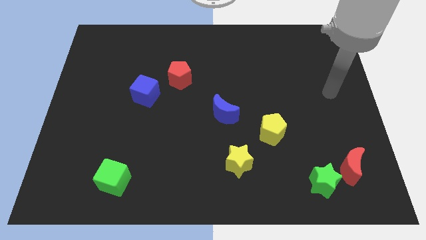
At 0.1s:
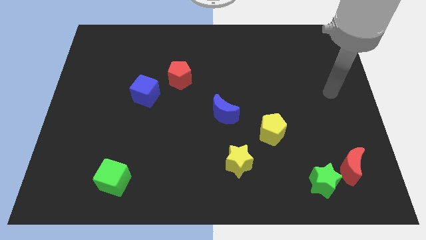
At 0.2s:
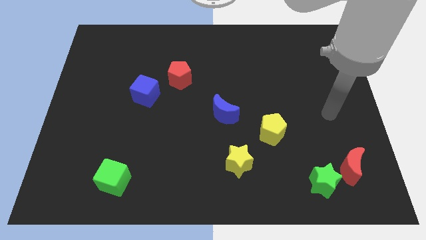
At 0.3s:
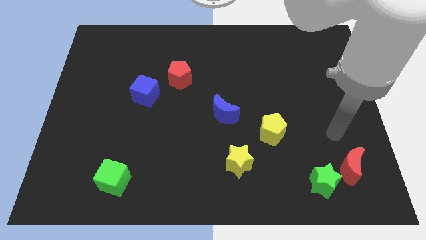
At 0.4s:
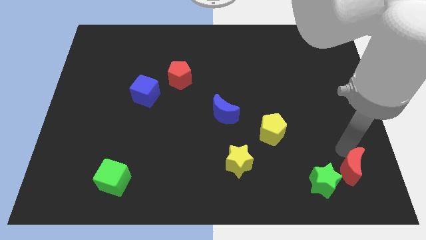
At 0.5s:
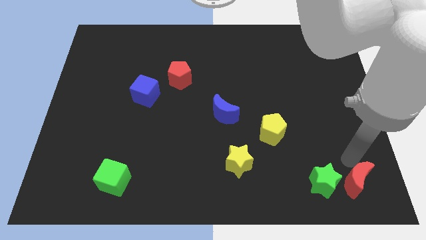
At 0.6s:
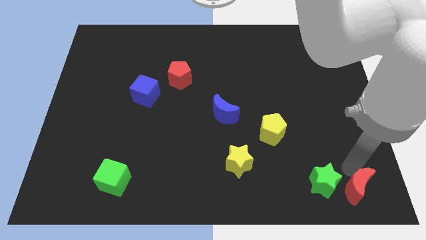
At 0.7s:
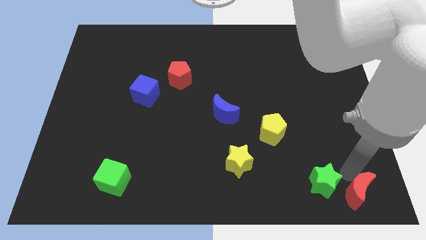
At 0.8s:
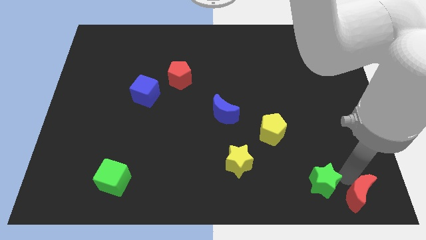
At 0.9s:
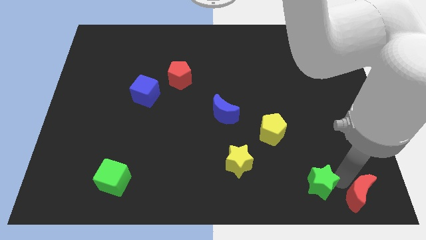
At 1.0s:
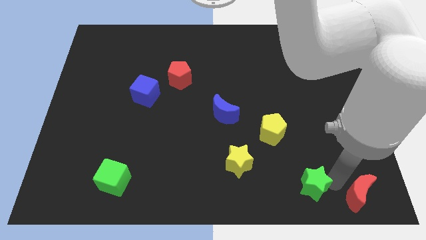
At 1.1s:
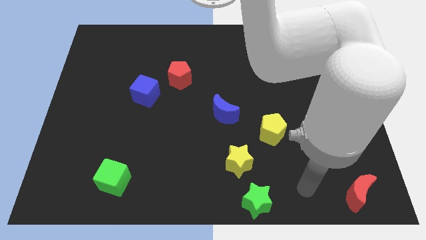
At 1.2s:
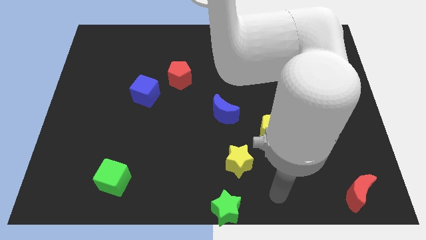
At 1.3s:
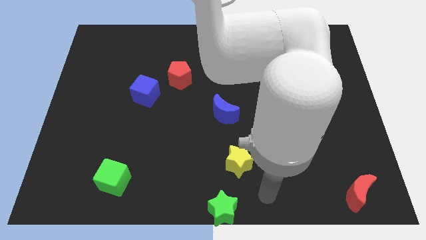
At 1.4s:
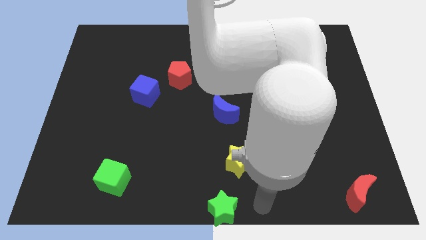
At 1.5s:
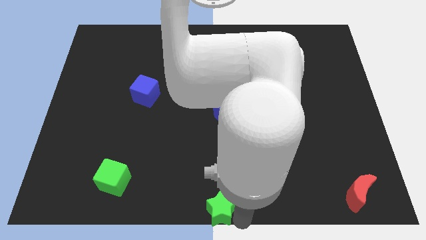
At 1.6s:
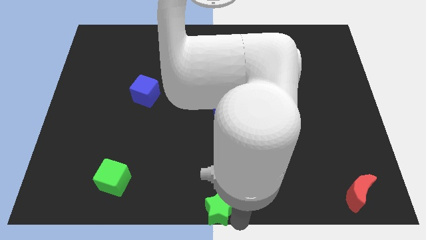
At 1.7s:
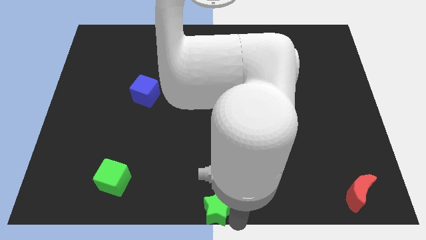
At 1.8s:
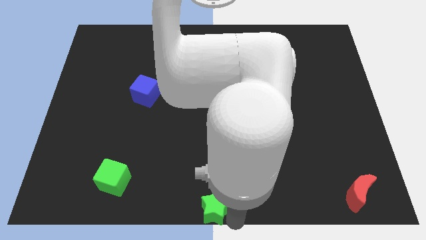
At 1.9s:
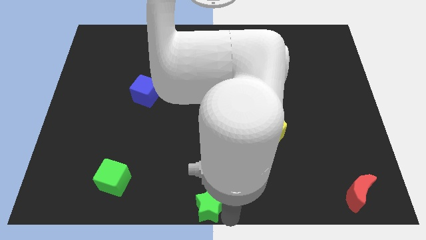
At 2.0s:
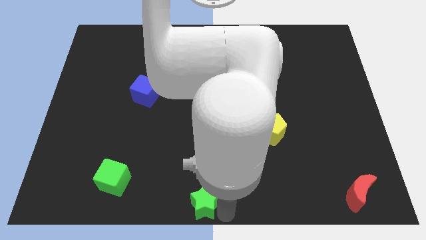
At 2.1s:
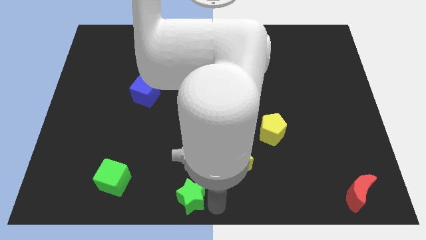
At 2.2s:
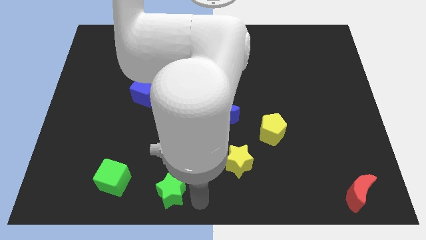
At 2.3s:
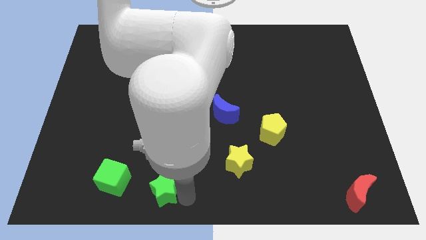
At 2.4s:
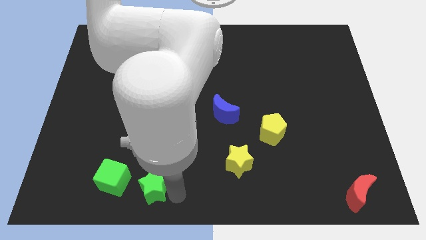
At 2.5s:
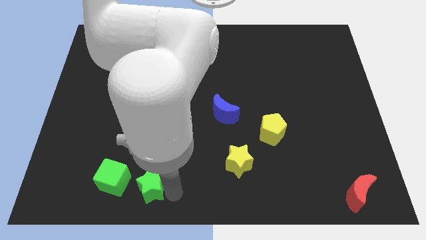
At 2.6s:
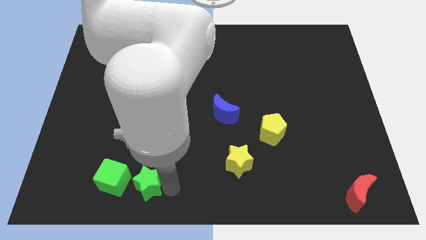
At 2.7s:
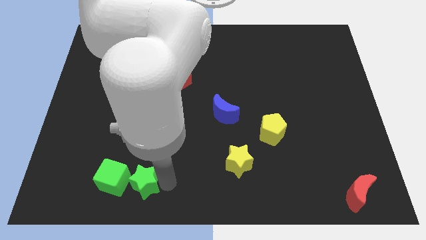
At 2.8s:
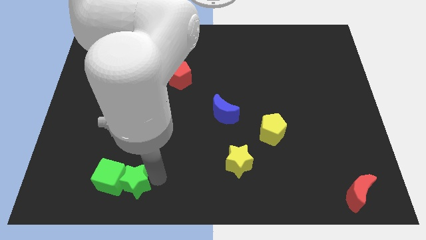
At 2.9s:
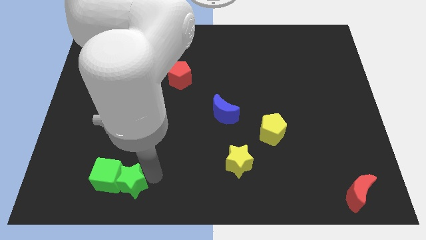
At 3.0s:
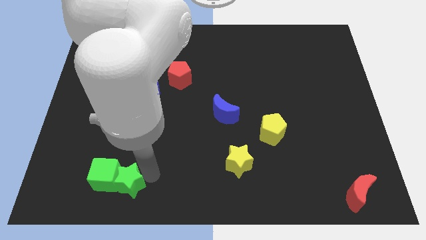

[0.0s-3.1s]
move the green star towards the green cube

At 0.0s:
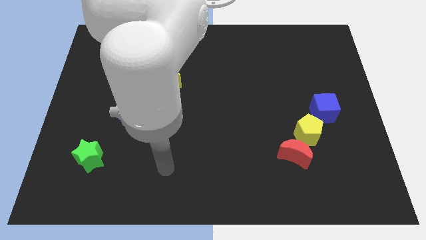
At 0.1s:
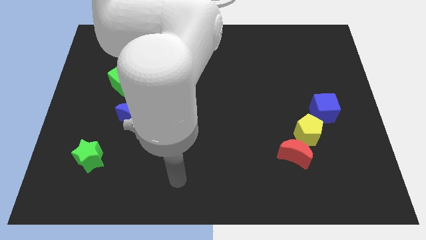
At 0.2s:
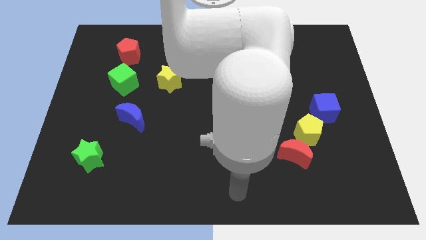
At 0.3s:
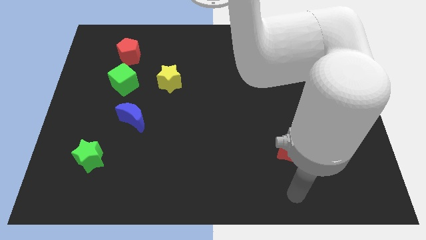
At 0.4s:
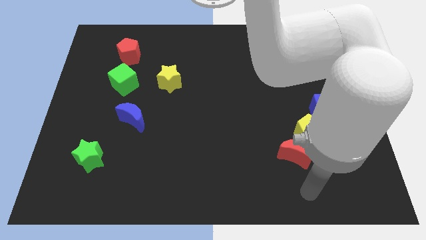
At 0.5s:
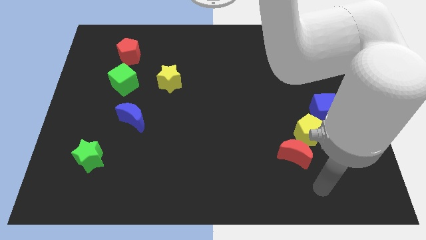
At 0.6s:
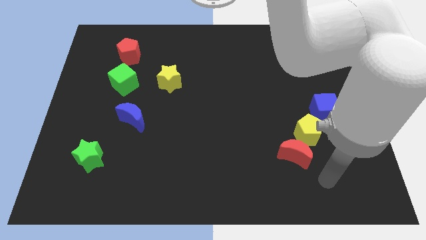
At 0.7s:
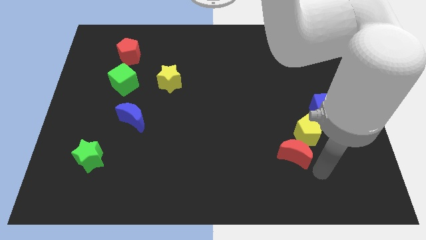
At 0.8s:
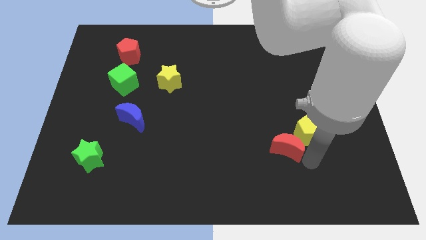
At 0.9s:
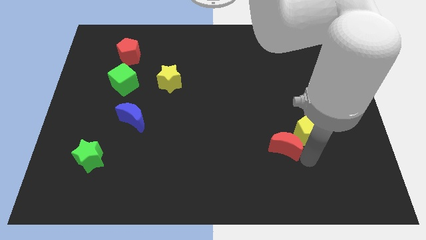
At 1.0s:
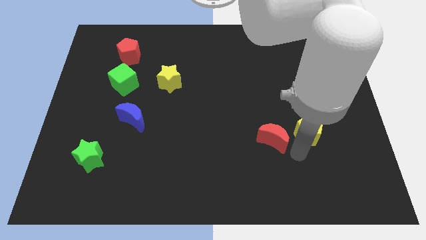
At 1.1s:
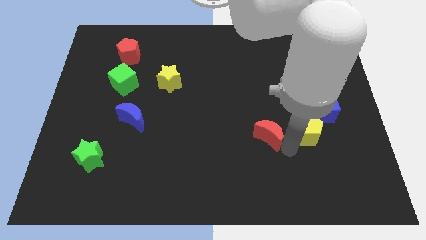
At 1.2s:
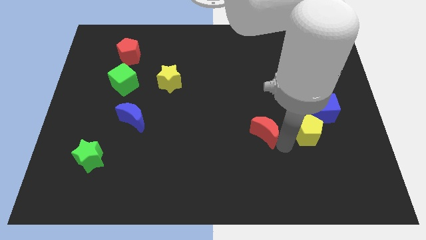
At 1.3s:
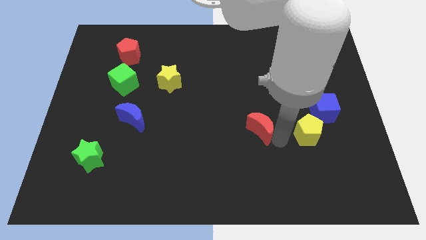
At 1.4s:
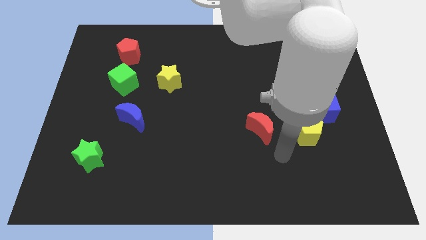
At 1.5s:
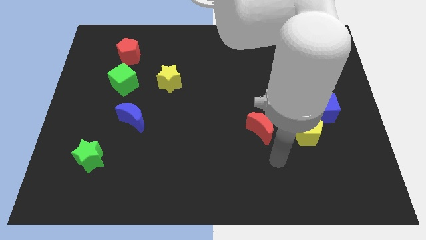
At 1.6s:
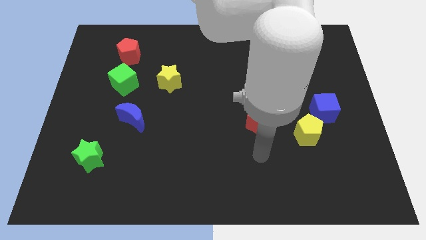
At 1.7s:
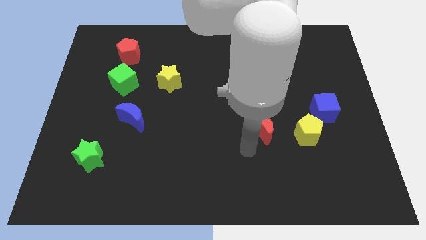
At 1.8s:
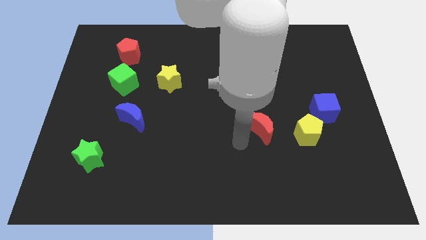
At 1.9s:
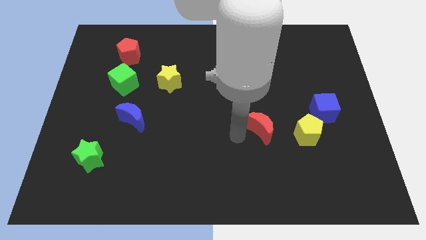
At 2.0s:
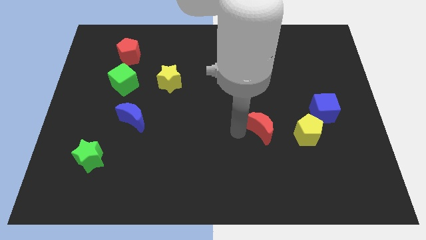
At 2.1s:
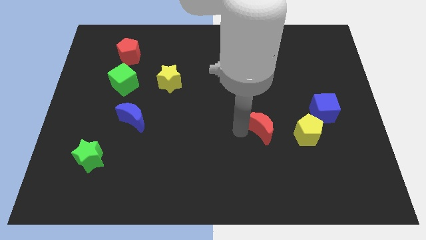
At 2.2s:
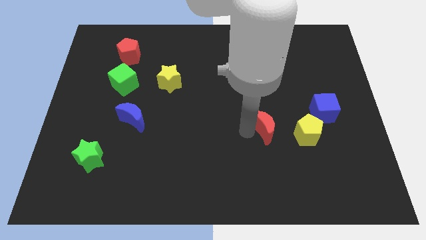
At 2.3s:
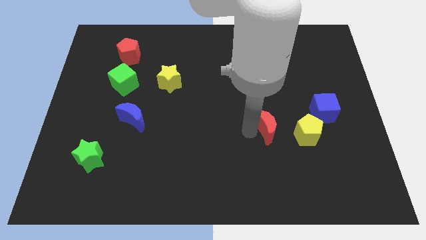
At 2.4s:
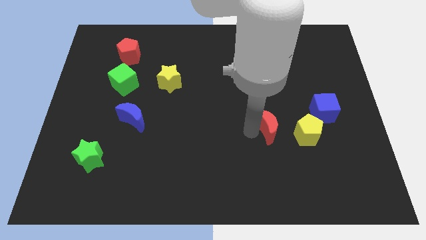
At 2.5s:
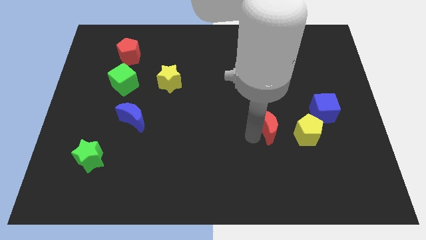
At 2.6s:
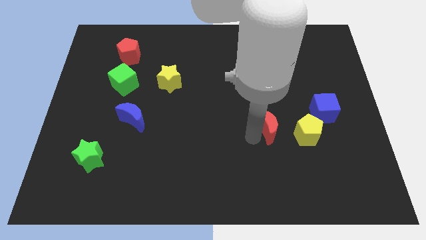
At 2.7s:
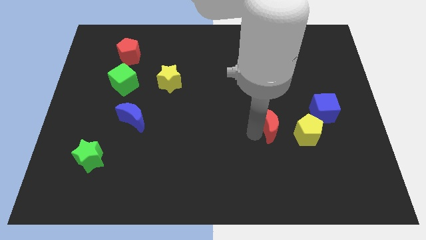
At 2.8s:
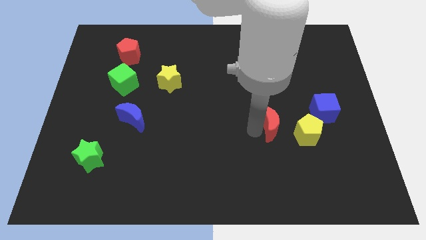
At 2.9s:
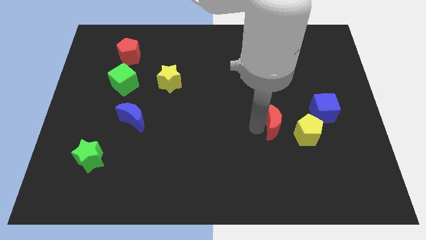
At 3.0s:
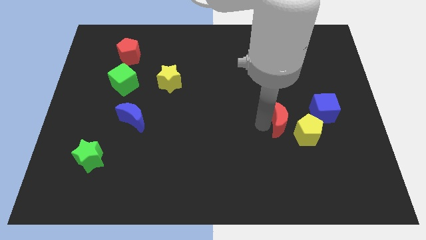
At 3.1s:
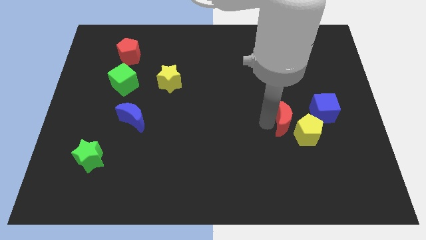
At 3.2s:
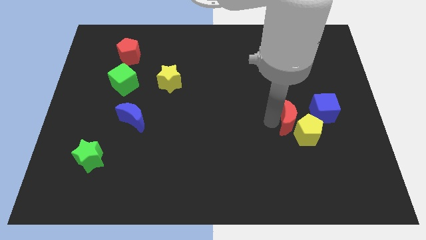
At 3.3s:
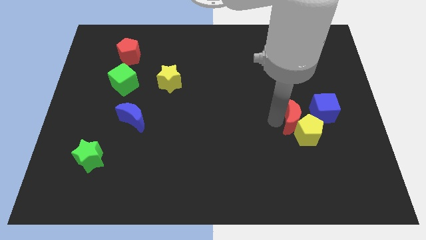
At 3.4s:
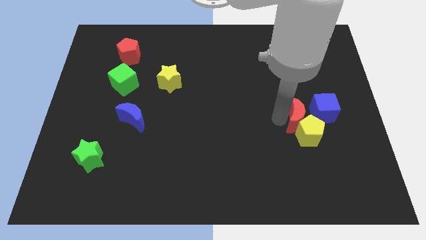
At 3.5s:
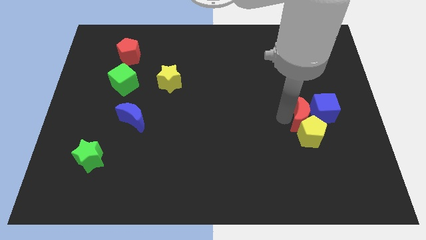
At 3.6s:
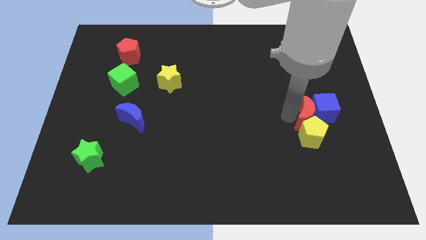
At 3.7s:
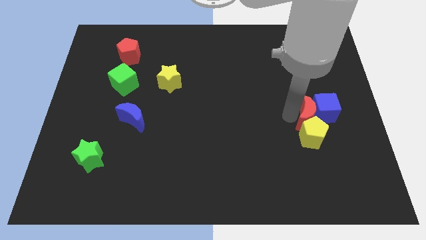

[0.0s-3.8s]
put the red moon to the blue cube

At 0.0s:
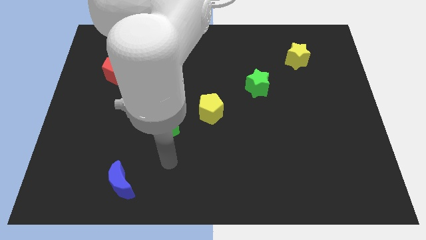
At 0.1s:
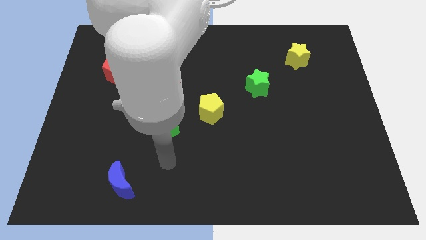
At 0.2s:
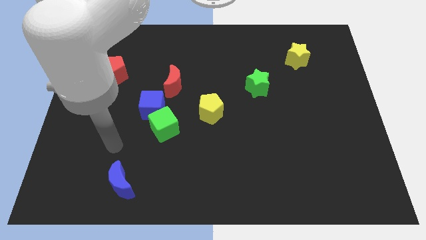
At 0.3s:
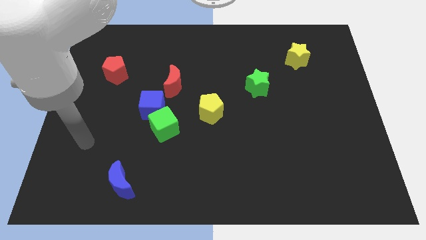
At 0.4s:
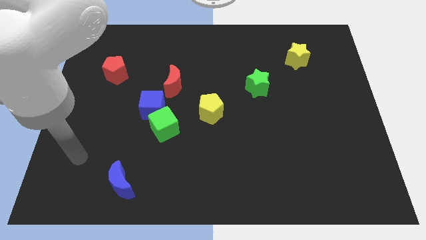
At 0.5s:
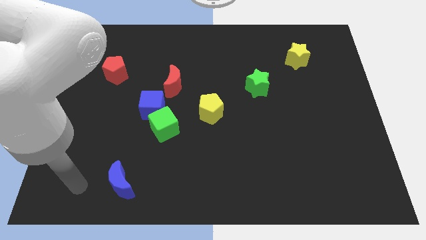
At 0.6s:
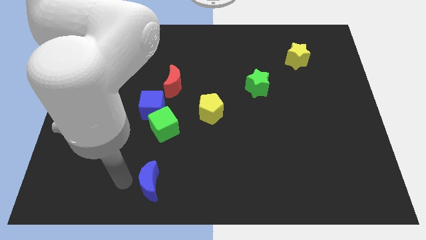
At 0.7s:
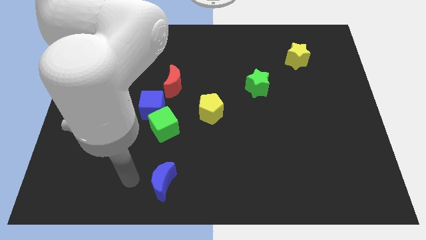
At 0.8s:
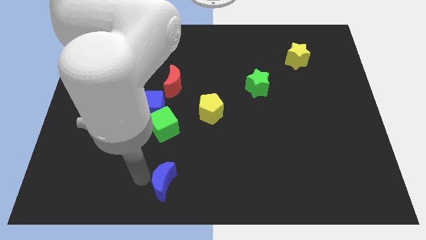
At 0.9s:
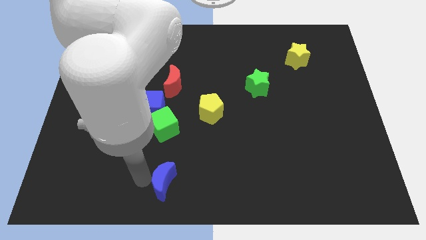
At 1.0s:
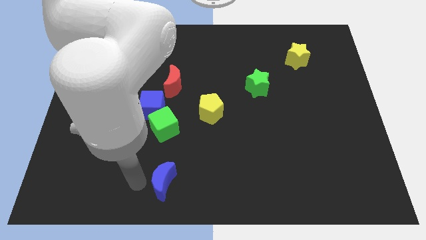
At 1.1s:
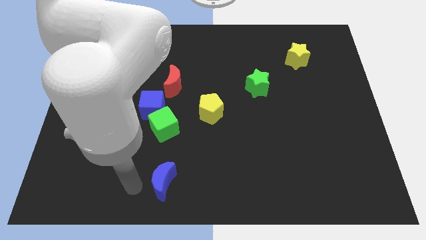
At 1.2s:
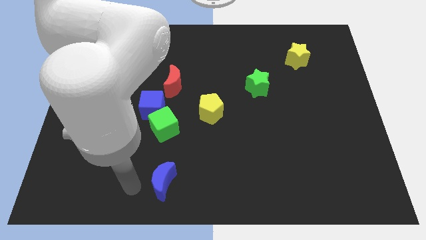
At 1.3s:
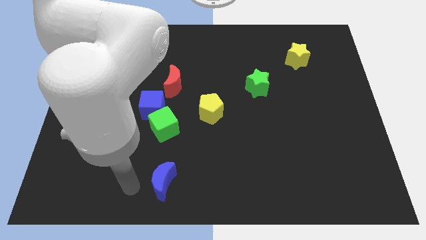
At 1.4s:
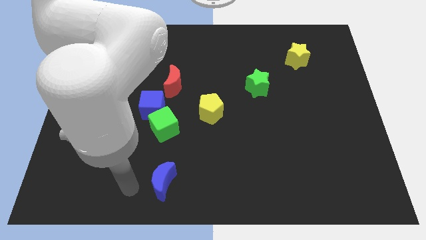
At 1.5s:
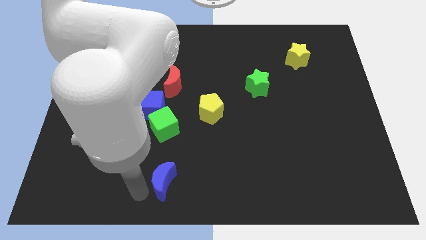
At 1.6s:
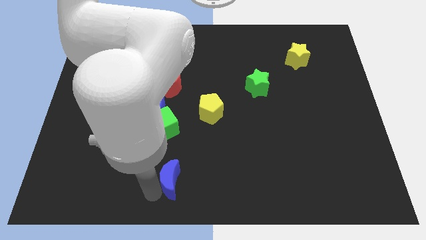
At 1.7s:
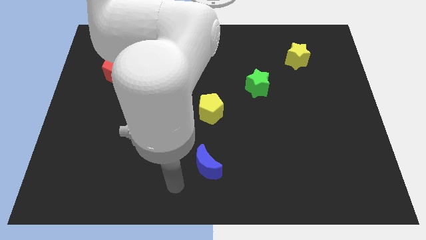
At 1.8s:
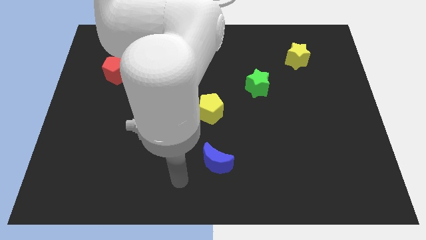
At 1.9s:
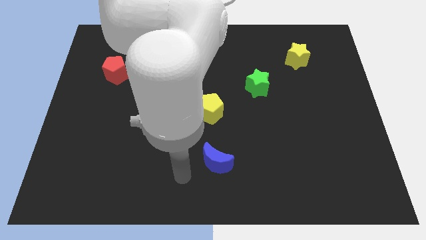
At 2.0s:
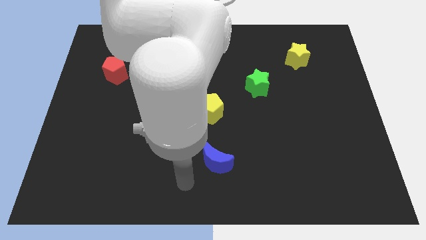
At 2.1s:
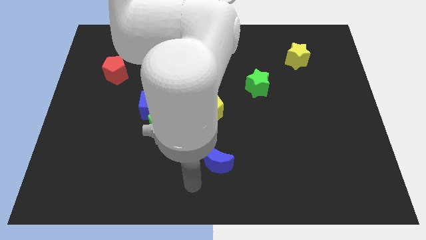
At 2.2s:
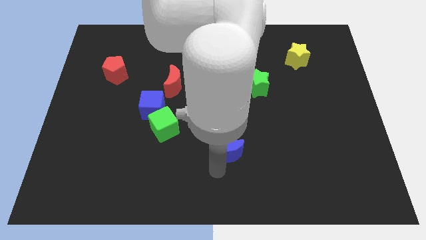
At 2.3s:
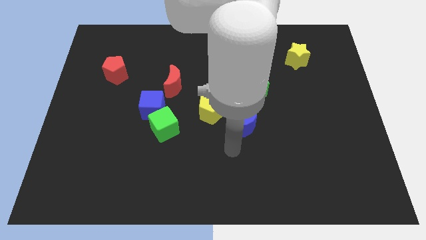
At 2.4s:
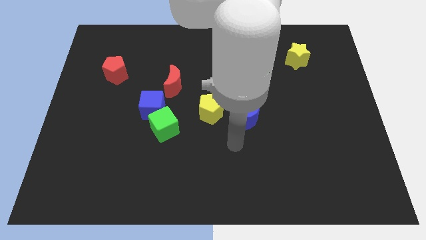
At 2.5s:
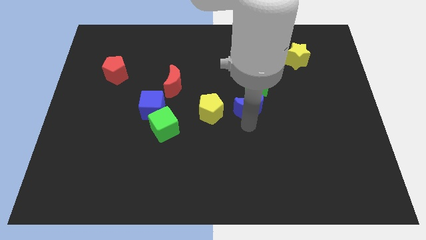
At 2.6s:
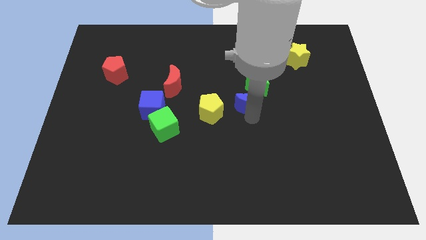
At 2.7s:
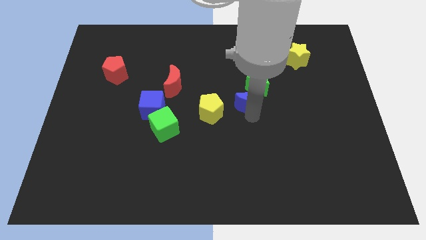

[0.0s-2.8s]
move the blue moon next to the green star
